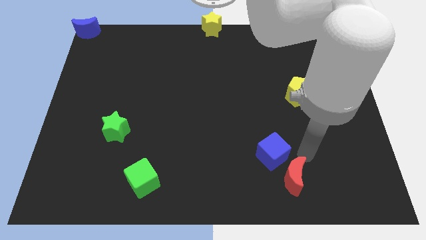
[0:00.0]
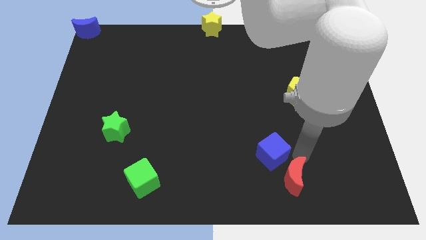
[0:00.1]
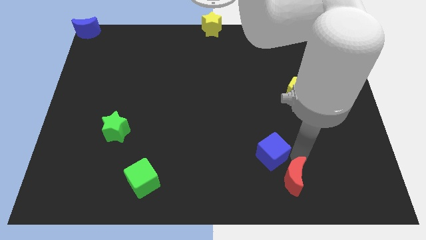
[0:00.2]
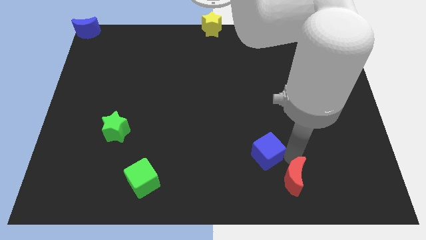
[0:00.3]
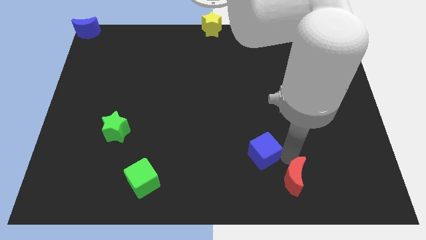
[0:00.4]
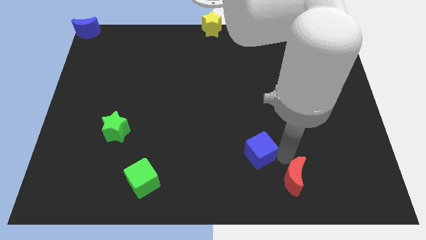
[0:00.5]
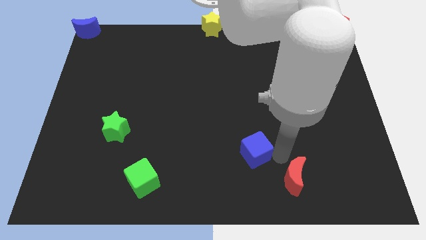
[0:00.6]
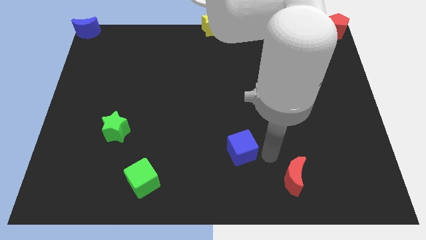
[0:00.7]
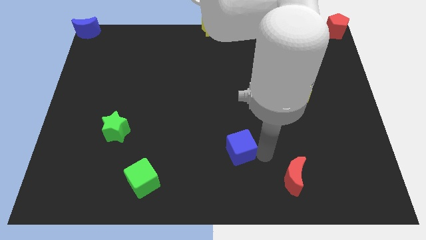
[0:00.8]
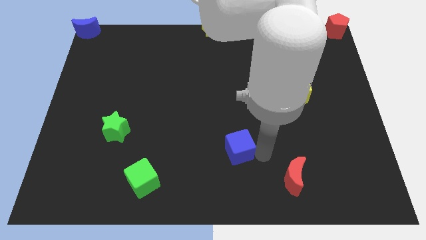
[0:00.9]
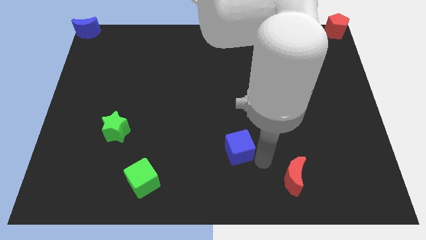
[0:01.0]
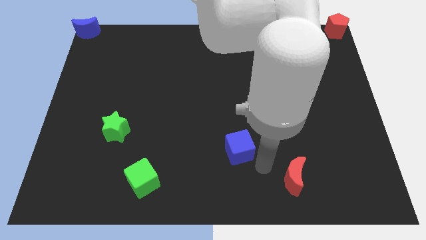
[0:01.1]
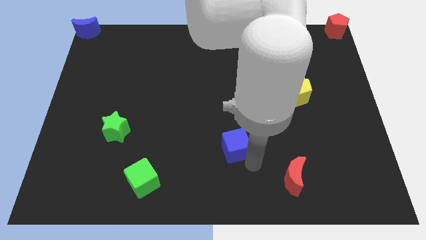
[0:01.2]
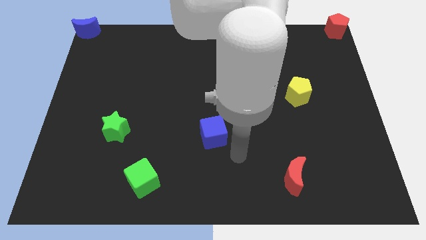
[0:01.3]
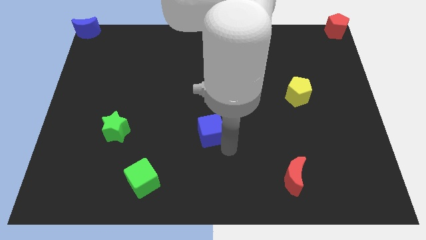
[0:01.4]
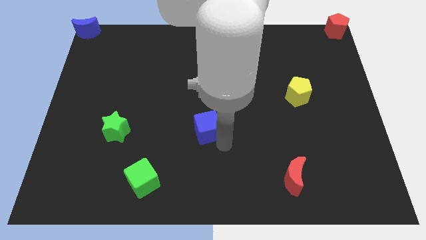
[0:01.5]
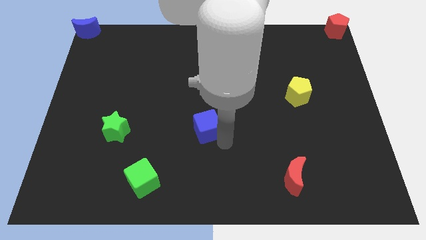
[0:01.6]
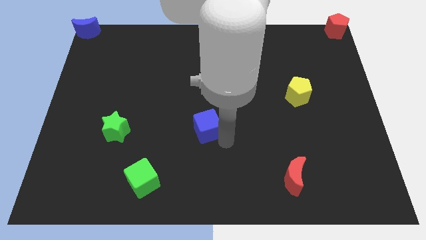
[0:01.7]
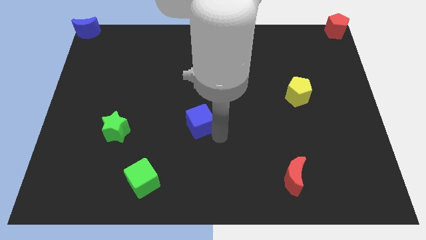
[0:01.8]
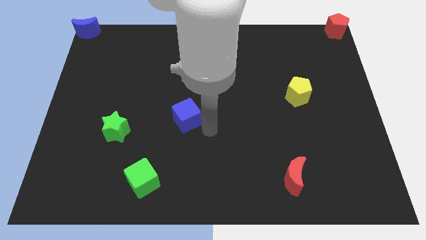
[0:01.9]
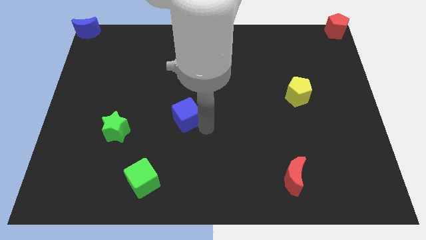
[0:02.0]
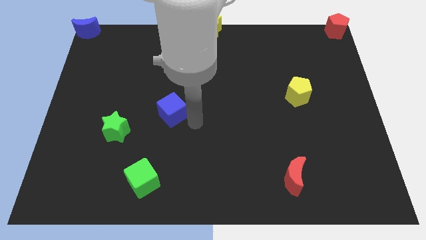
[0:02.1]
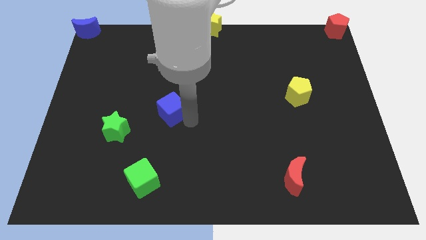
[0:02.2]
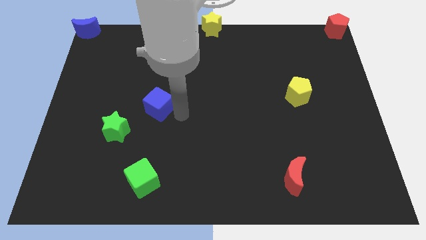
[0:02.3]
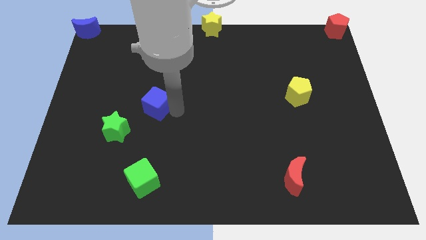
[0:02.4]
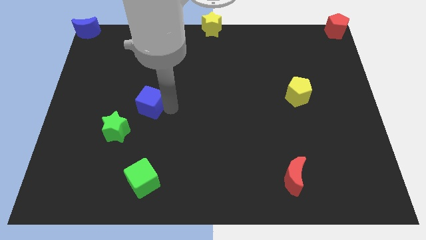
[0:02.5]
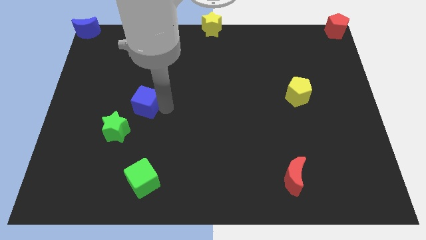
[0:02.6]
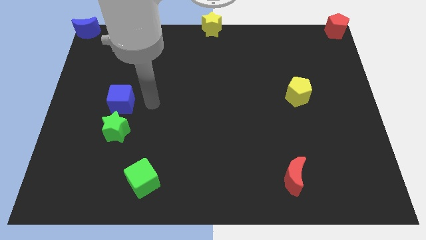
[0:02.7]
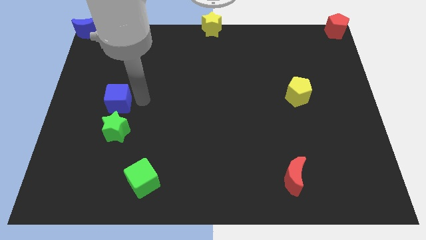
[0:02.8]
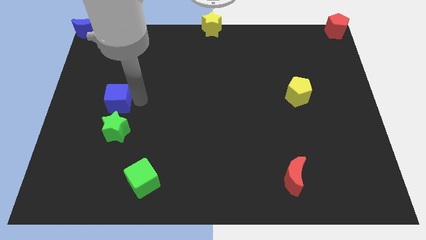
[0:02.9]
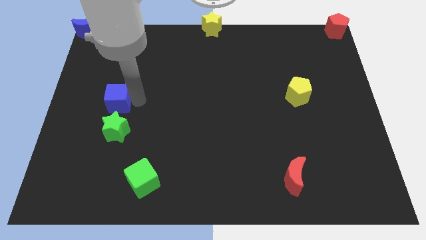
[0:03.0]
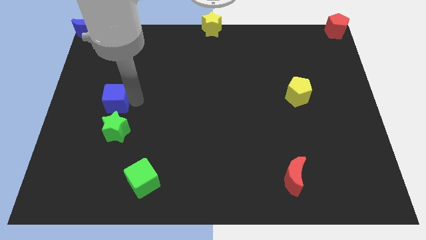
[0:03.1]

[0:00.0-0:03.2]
place blue cube on top of green star

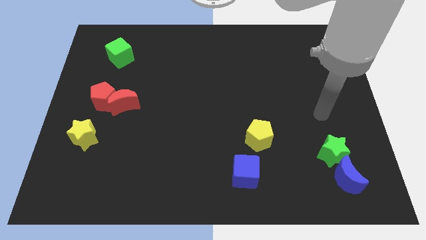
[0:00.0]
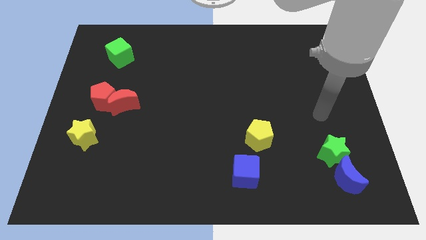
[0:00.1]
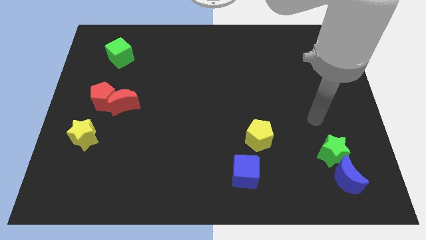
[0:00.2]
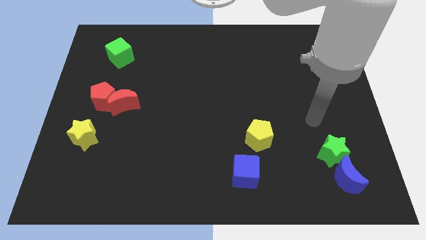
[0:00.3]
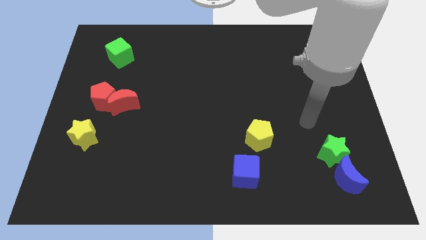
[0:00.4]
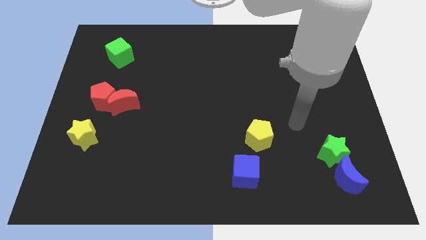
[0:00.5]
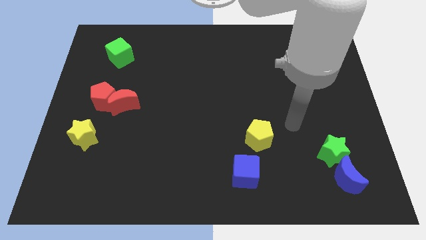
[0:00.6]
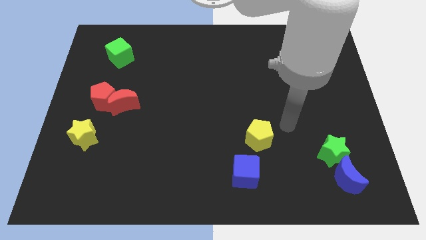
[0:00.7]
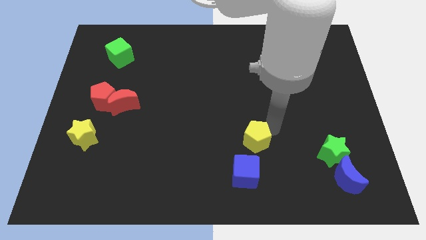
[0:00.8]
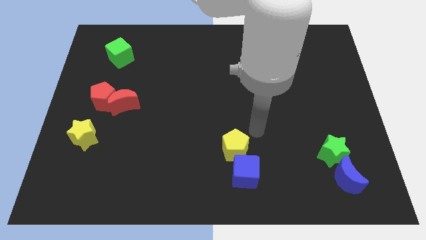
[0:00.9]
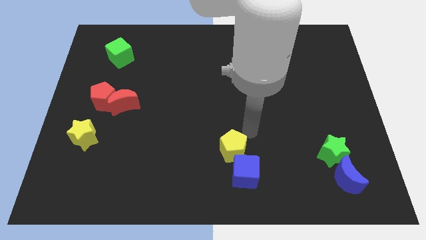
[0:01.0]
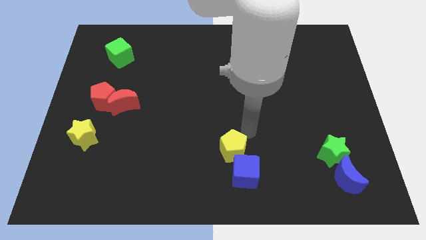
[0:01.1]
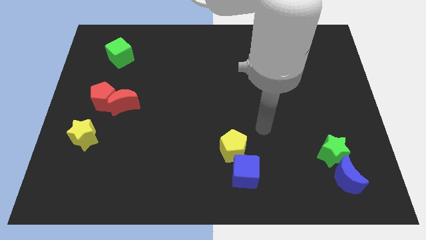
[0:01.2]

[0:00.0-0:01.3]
put the yellow pentagon at the top left side of the blue cube

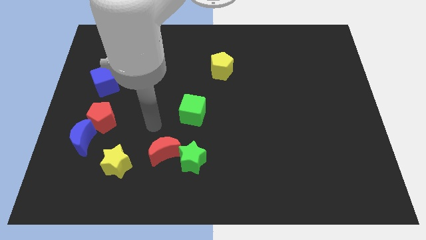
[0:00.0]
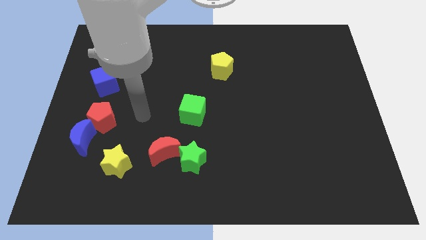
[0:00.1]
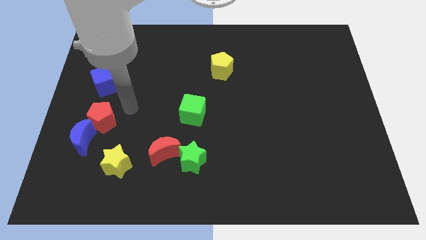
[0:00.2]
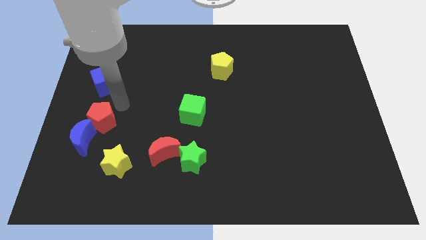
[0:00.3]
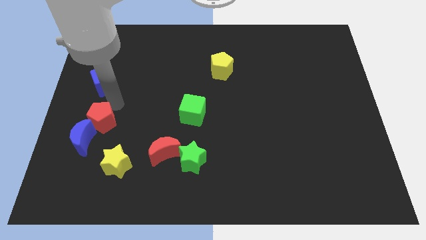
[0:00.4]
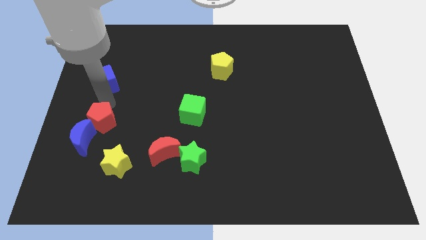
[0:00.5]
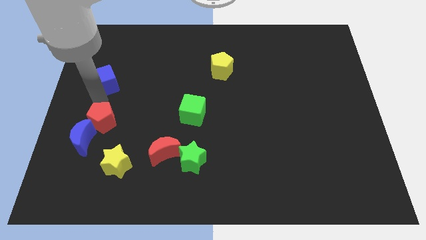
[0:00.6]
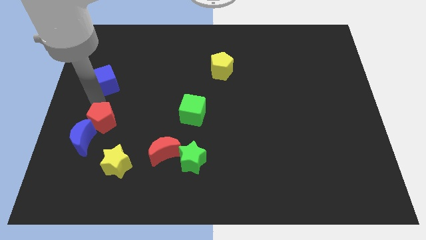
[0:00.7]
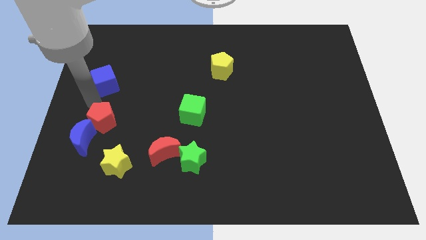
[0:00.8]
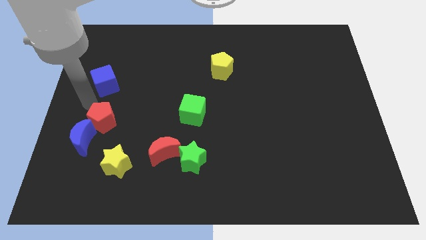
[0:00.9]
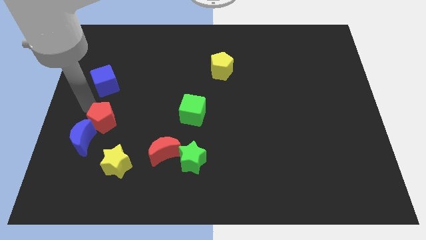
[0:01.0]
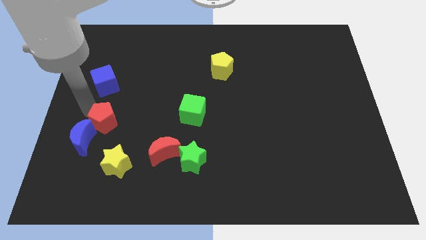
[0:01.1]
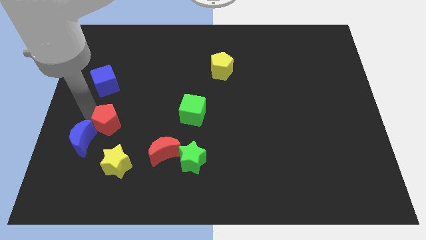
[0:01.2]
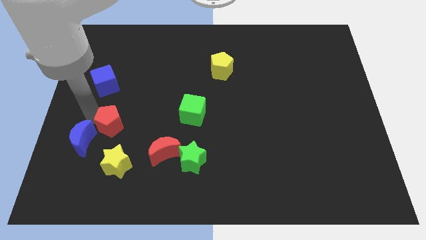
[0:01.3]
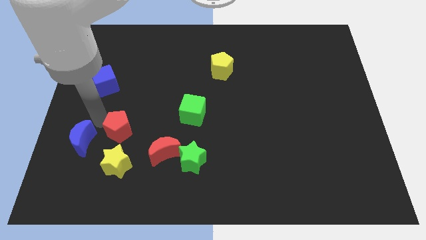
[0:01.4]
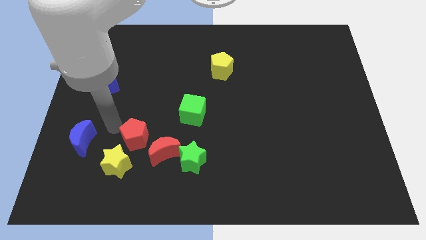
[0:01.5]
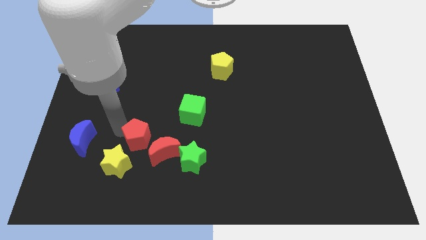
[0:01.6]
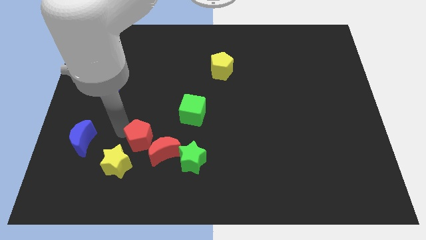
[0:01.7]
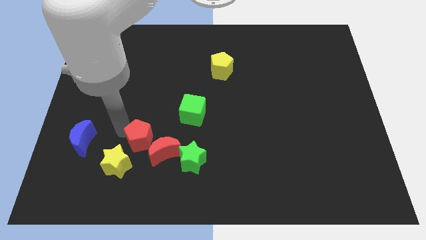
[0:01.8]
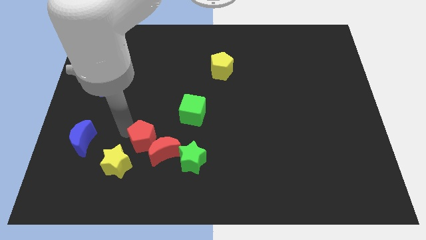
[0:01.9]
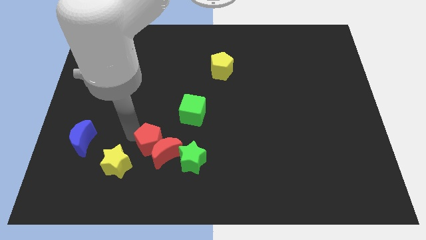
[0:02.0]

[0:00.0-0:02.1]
separate the red pentagon from blue moon

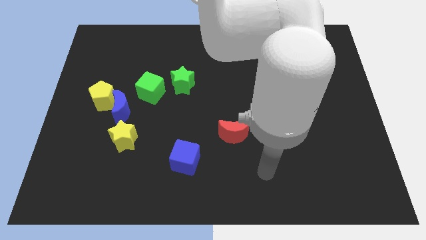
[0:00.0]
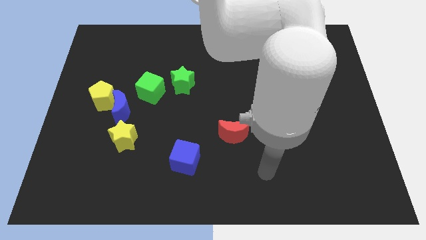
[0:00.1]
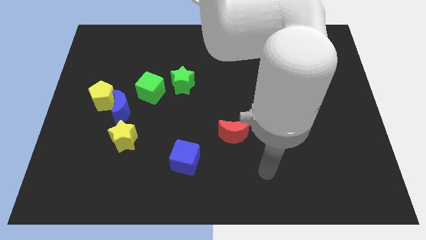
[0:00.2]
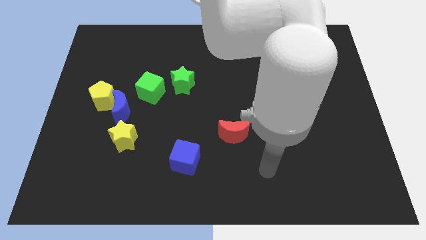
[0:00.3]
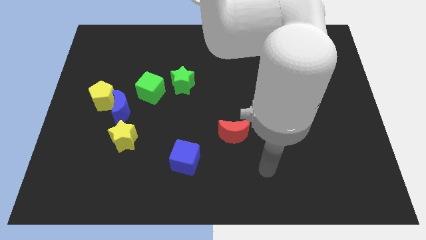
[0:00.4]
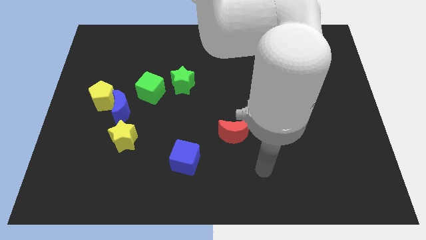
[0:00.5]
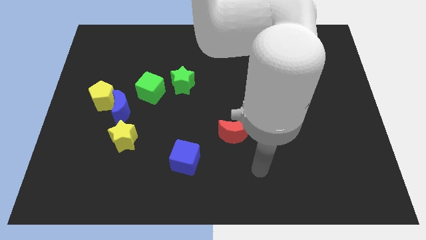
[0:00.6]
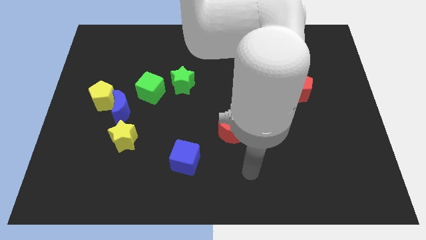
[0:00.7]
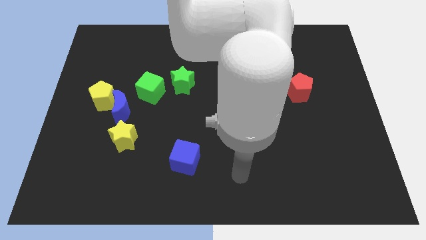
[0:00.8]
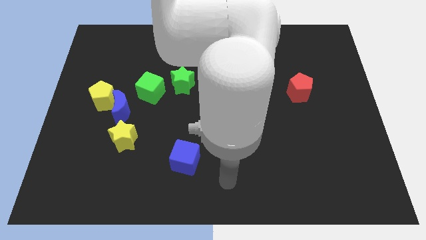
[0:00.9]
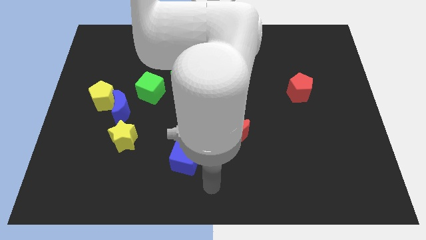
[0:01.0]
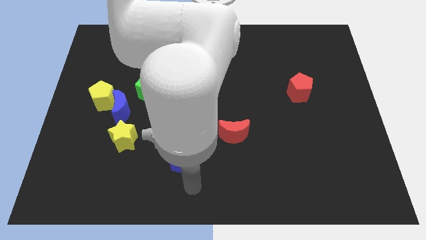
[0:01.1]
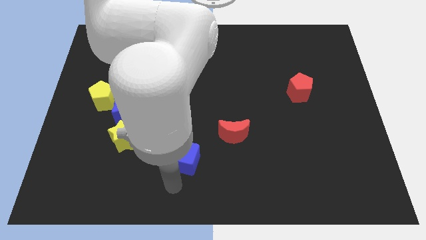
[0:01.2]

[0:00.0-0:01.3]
move your arm to the bottom of the blue cube

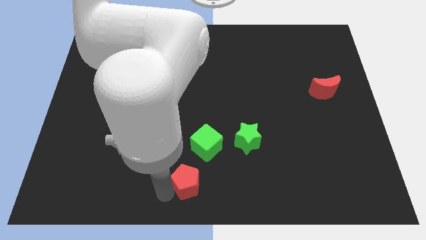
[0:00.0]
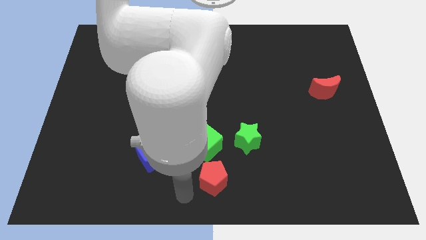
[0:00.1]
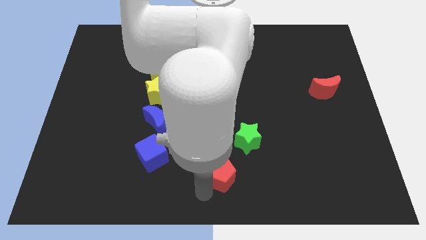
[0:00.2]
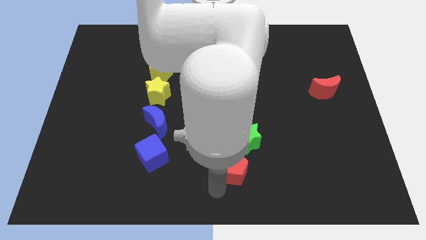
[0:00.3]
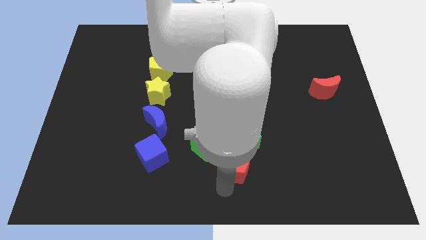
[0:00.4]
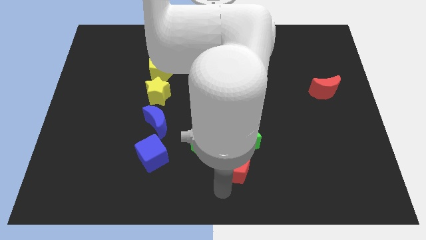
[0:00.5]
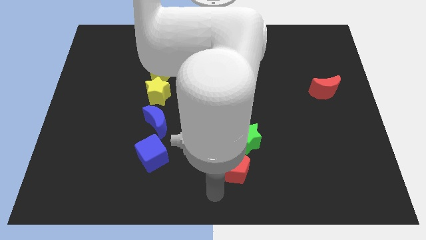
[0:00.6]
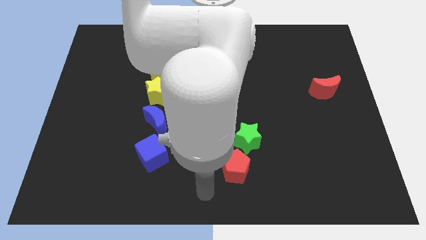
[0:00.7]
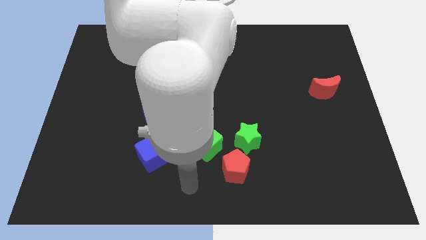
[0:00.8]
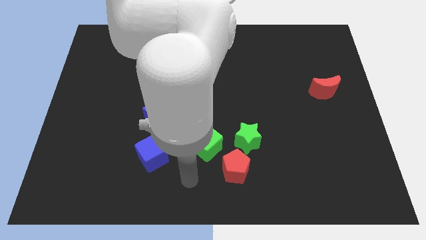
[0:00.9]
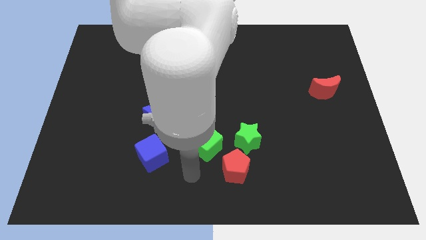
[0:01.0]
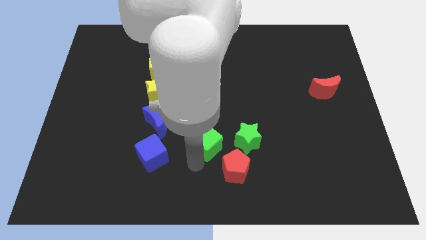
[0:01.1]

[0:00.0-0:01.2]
move the red pentagon below the green star
